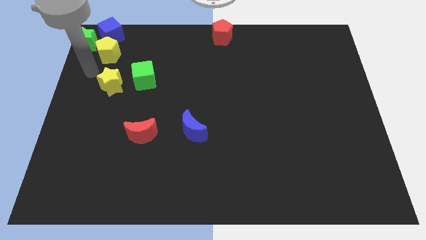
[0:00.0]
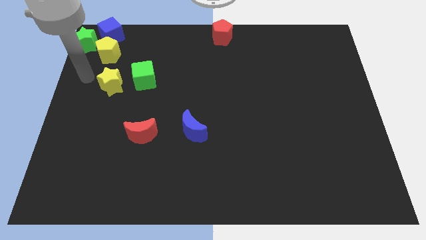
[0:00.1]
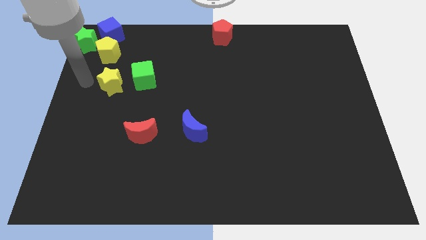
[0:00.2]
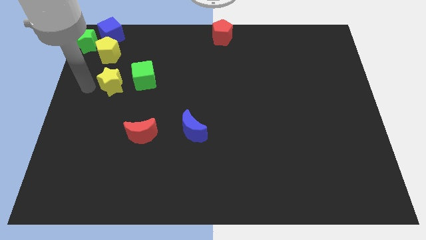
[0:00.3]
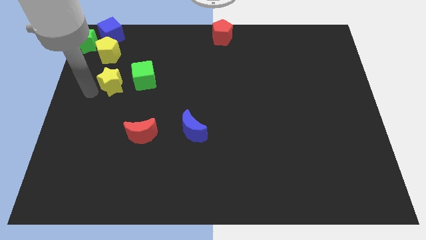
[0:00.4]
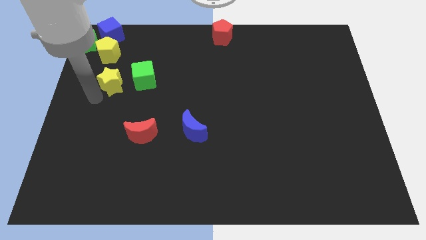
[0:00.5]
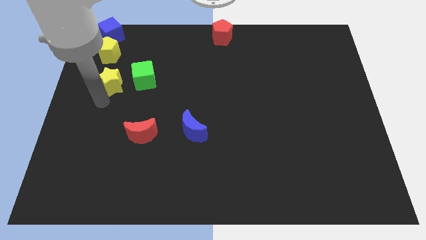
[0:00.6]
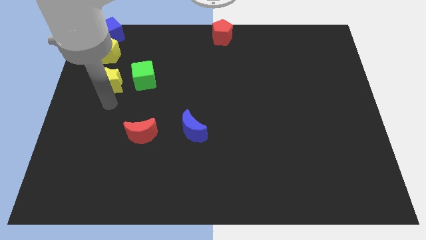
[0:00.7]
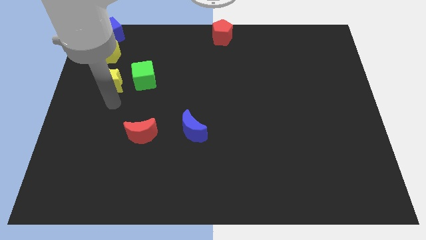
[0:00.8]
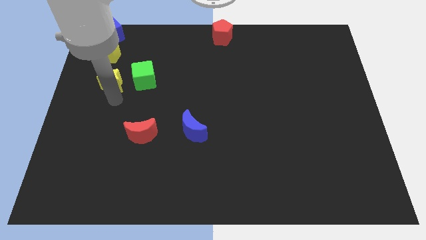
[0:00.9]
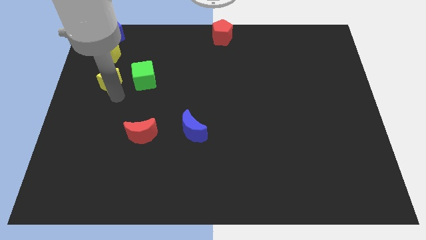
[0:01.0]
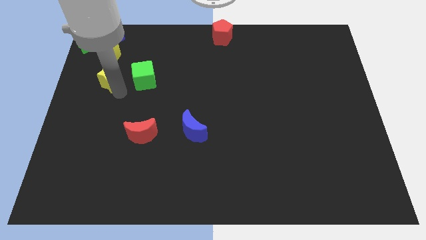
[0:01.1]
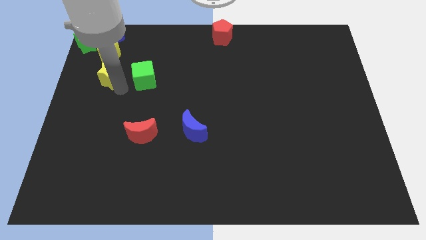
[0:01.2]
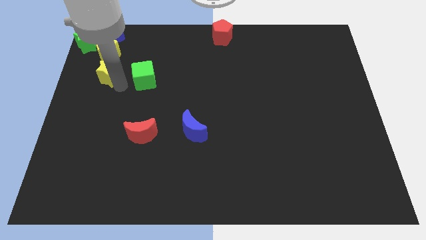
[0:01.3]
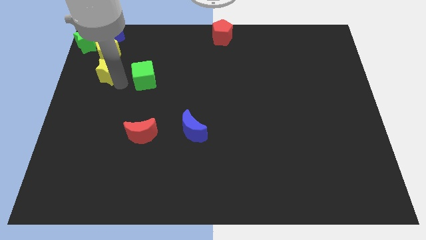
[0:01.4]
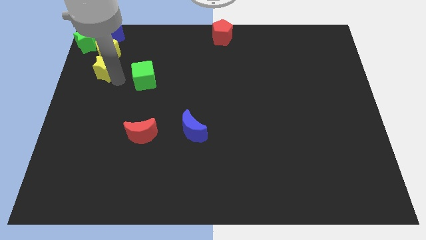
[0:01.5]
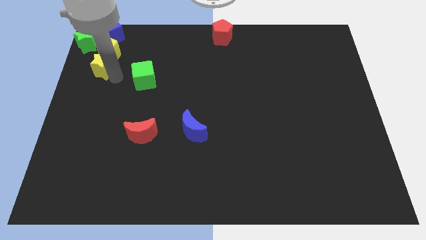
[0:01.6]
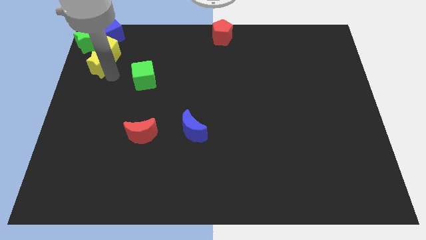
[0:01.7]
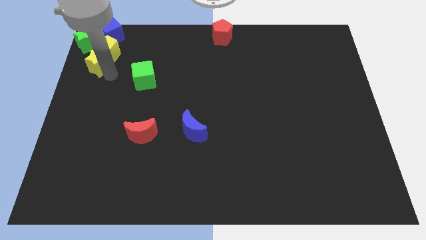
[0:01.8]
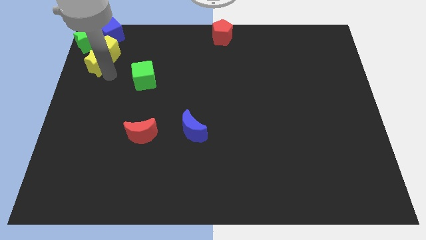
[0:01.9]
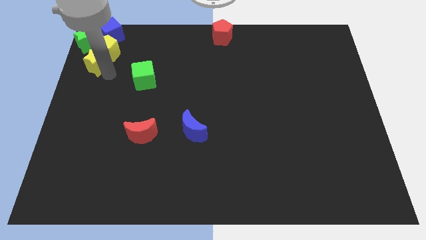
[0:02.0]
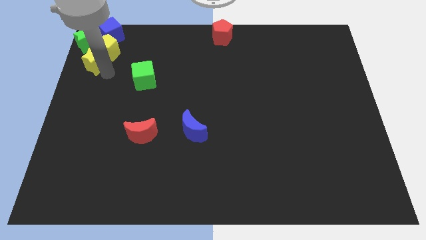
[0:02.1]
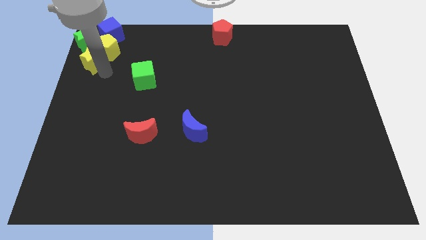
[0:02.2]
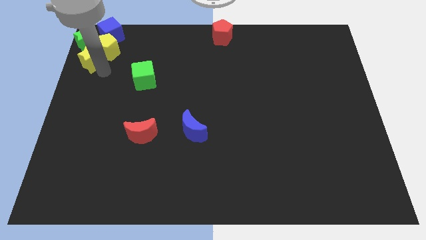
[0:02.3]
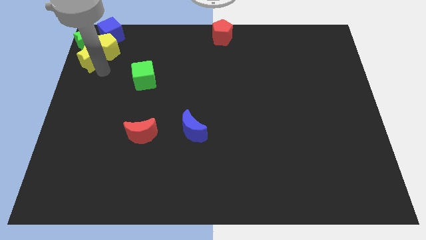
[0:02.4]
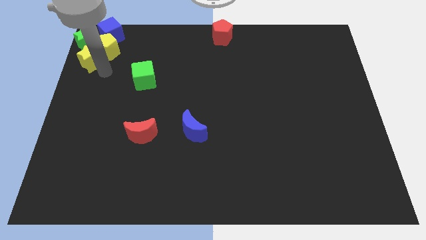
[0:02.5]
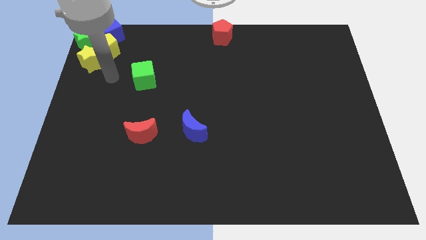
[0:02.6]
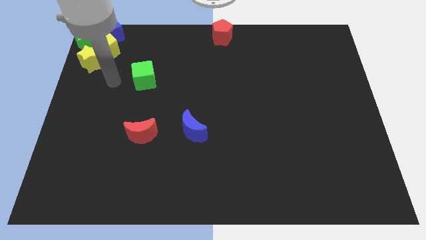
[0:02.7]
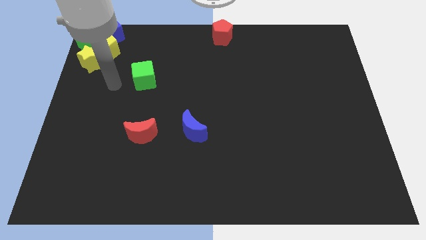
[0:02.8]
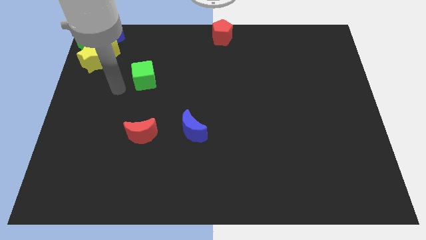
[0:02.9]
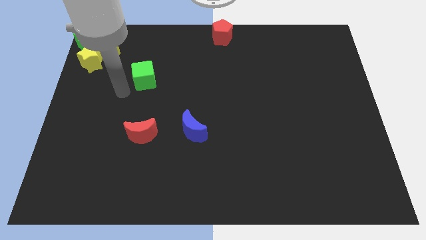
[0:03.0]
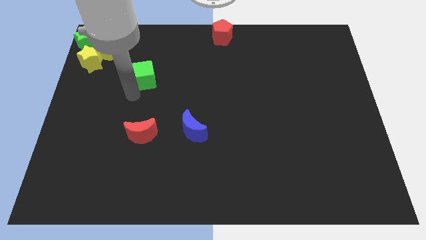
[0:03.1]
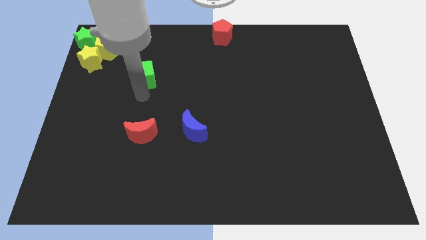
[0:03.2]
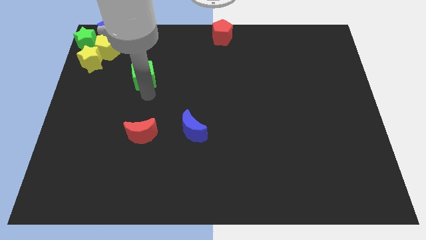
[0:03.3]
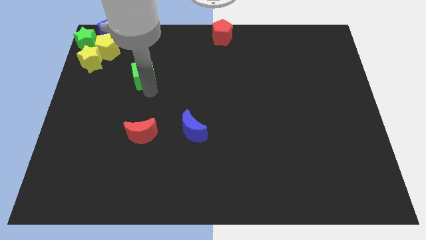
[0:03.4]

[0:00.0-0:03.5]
push yellow star to the left of the yellow pentagon

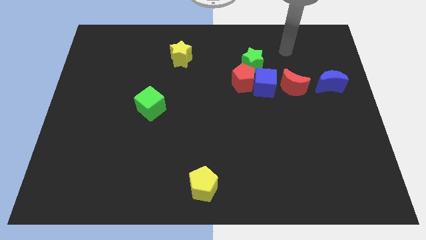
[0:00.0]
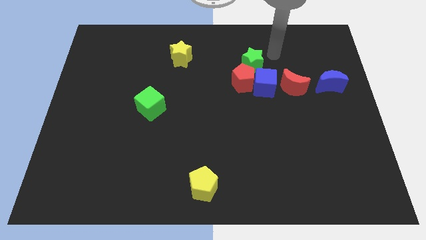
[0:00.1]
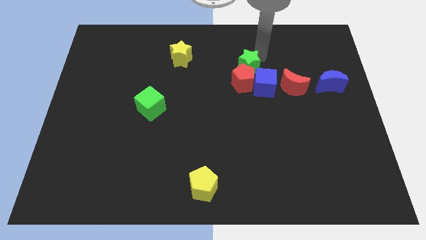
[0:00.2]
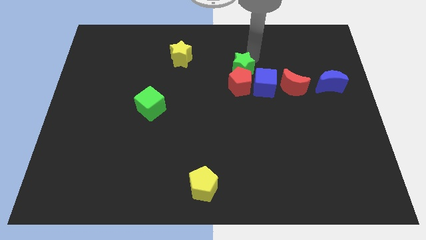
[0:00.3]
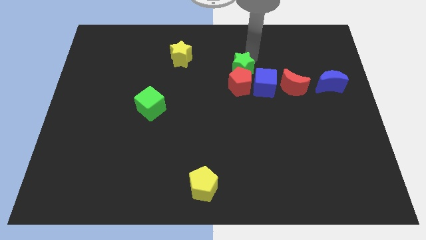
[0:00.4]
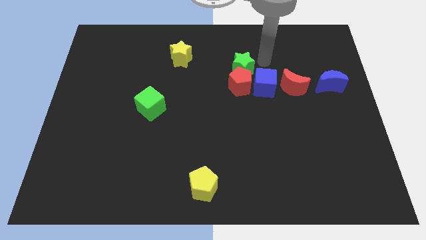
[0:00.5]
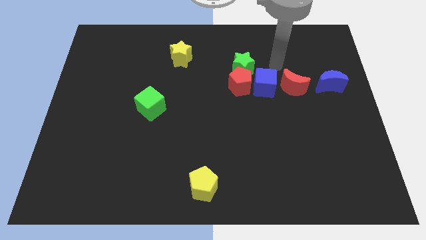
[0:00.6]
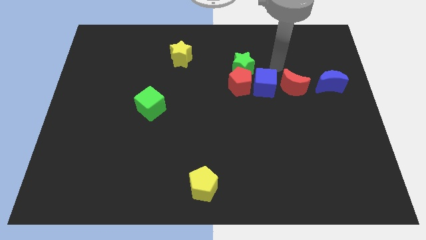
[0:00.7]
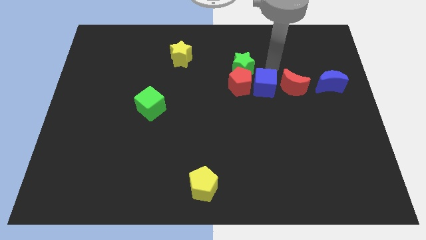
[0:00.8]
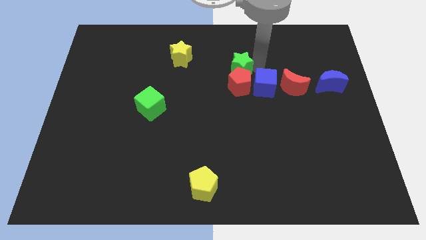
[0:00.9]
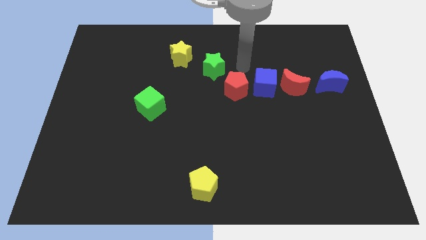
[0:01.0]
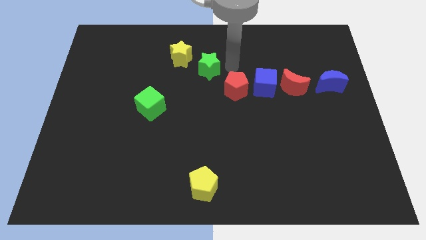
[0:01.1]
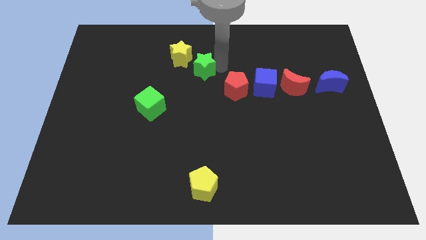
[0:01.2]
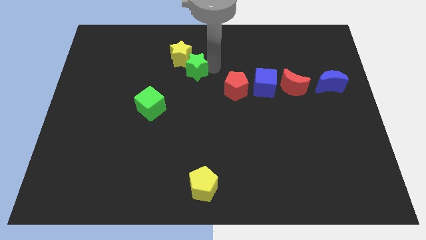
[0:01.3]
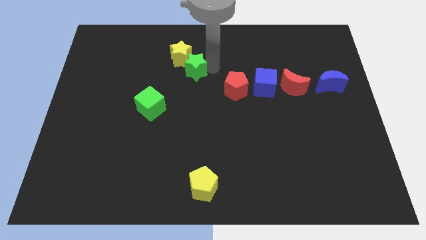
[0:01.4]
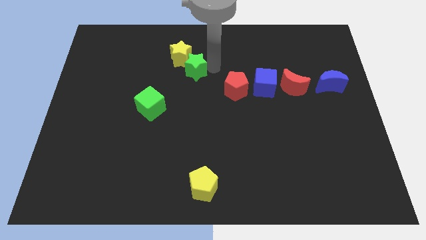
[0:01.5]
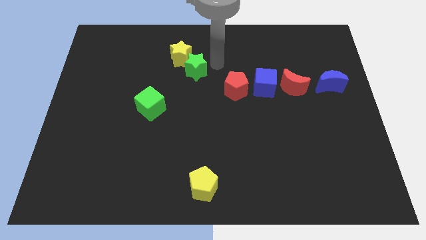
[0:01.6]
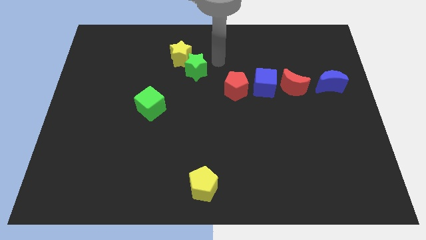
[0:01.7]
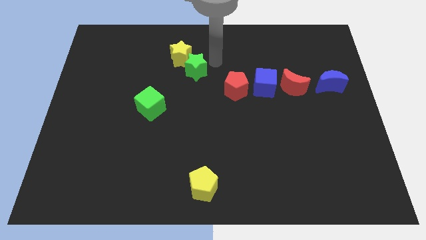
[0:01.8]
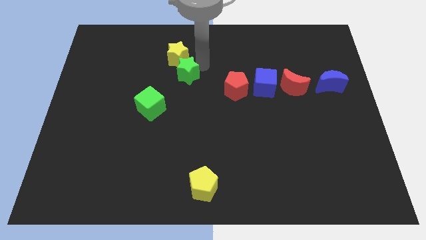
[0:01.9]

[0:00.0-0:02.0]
push the green star into yellow star

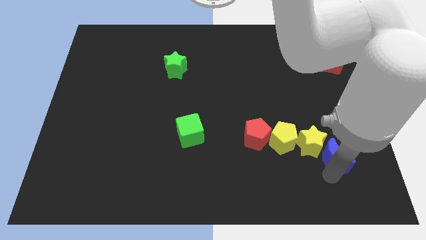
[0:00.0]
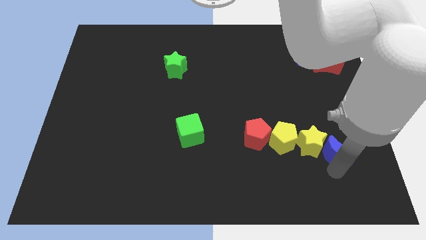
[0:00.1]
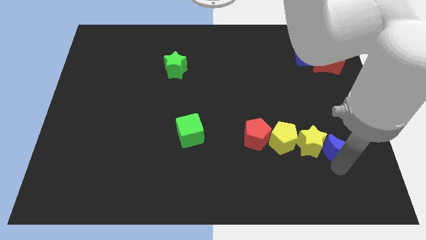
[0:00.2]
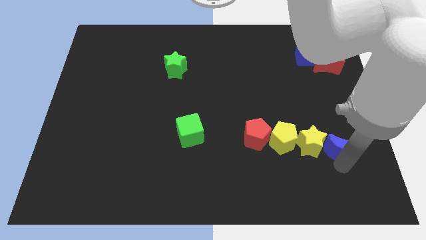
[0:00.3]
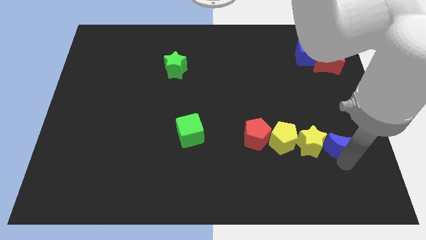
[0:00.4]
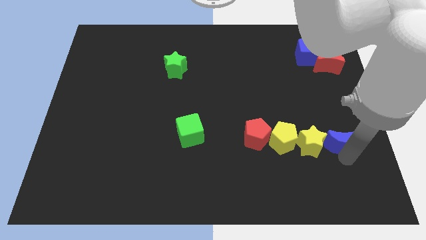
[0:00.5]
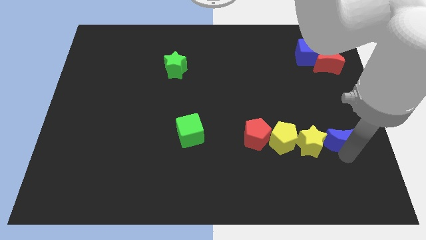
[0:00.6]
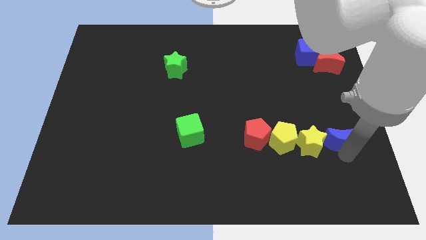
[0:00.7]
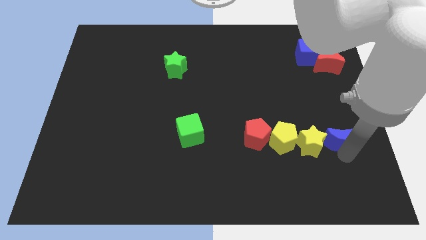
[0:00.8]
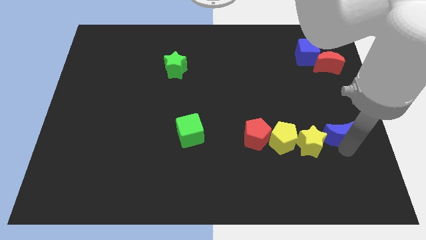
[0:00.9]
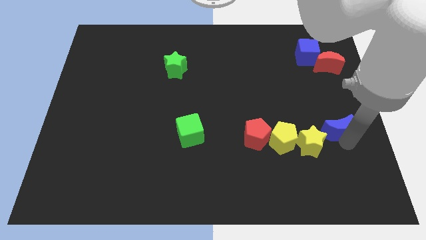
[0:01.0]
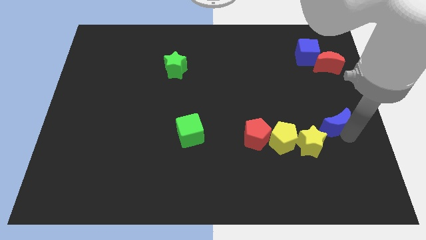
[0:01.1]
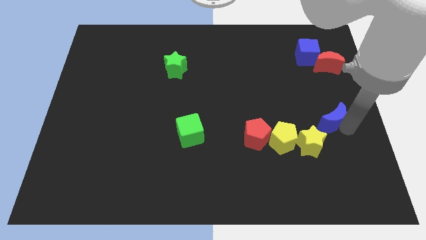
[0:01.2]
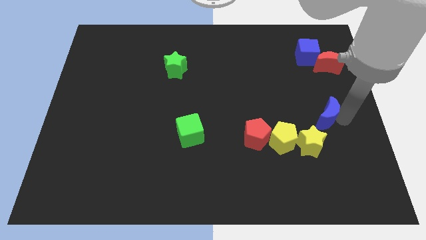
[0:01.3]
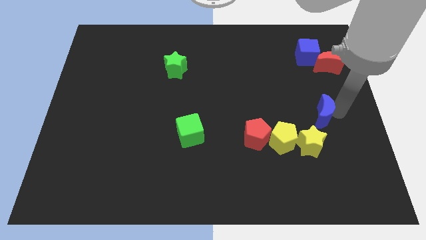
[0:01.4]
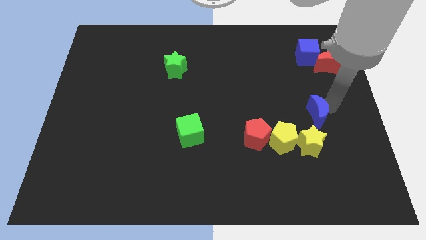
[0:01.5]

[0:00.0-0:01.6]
place the blue crescent above the yellow star

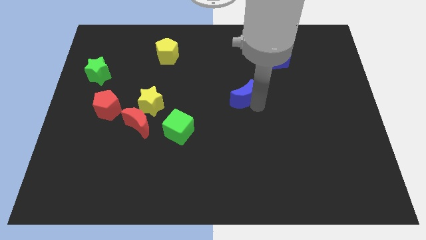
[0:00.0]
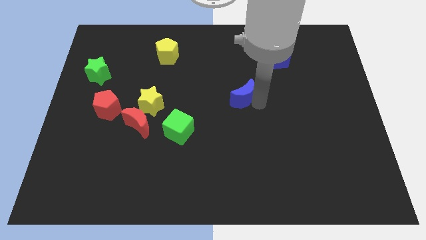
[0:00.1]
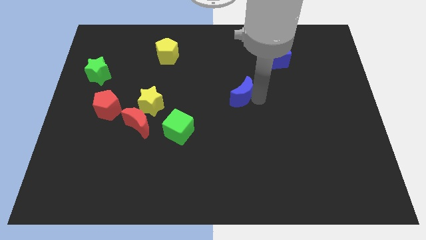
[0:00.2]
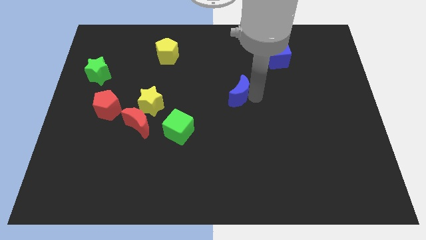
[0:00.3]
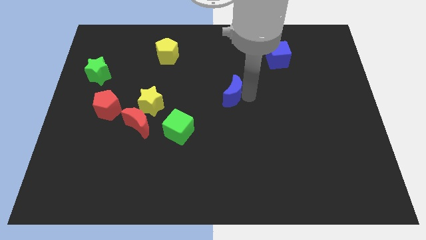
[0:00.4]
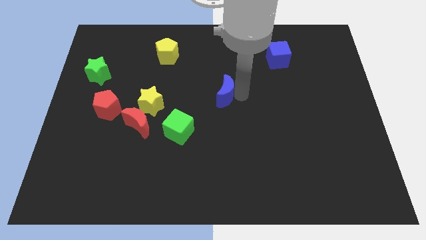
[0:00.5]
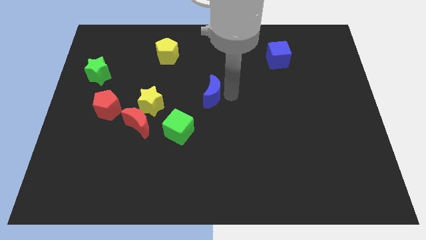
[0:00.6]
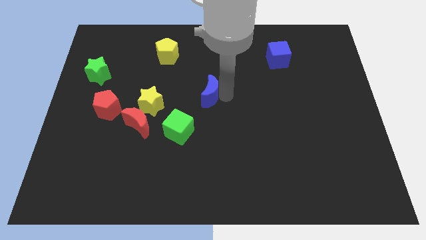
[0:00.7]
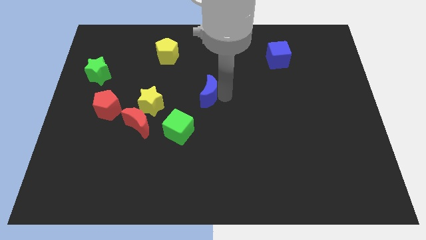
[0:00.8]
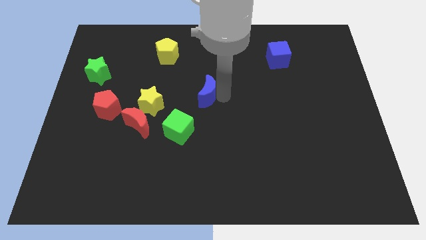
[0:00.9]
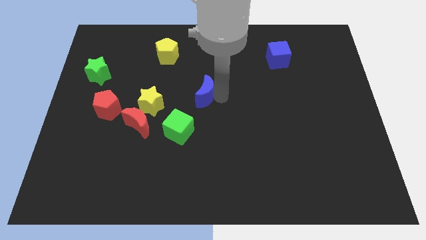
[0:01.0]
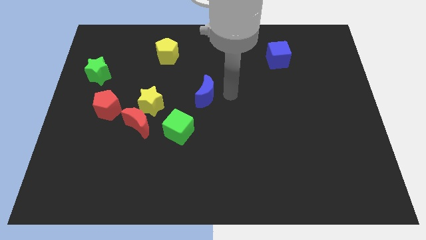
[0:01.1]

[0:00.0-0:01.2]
put blue moon at the center

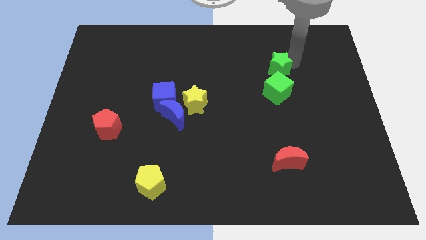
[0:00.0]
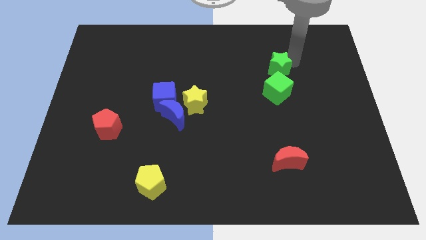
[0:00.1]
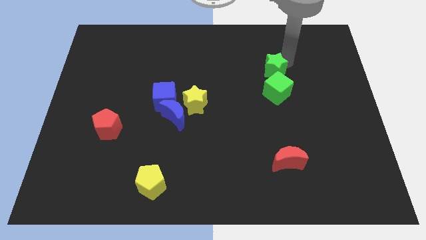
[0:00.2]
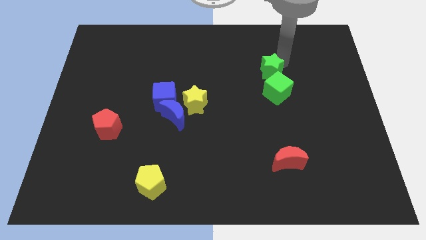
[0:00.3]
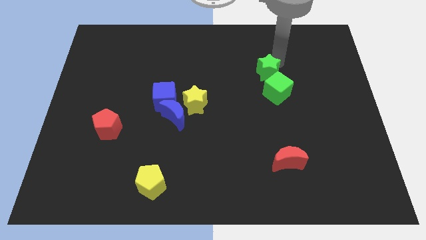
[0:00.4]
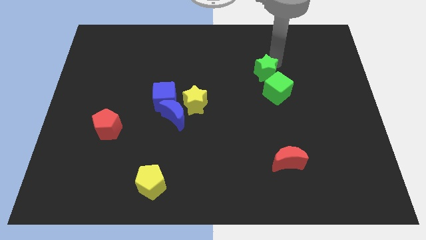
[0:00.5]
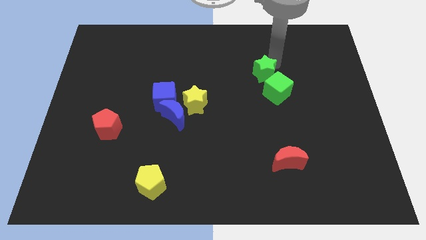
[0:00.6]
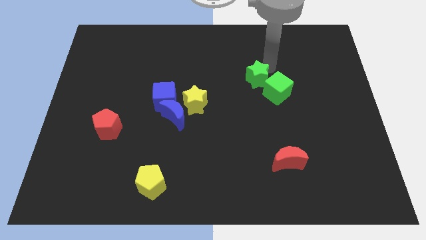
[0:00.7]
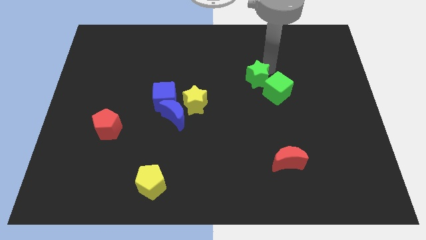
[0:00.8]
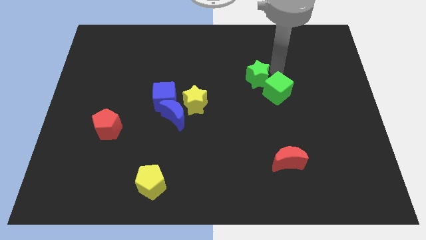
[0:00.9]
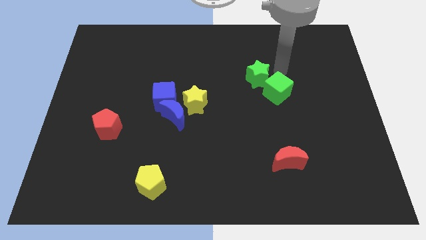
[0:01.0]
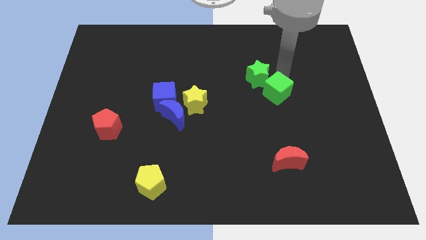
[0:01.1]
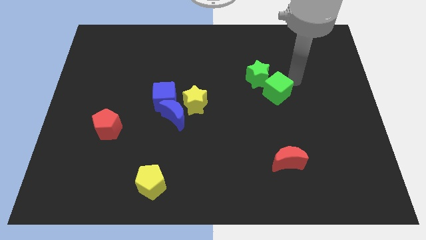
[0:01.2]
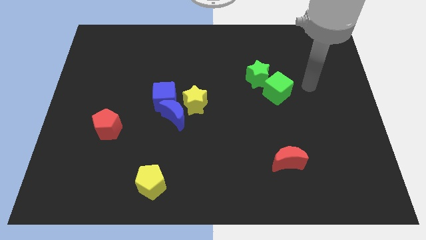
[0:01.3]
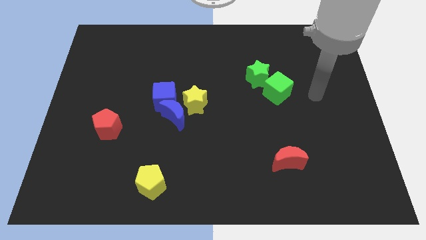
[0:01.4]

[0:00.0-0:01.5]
place the green star to the left of green cube
